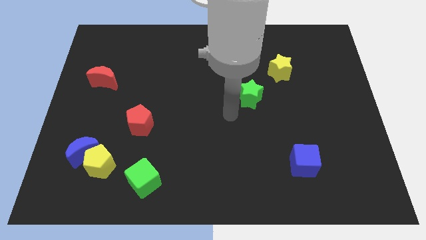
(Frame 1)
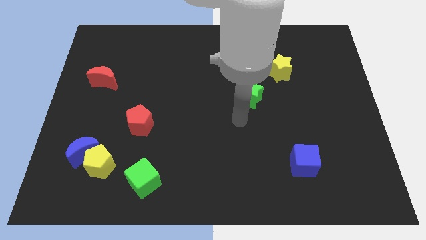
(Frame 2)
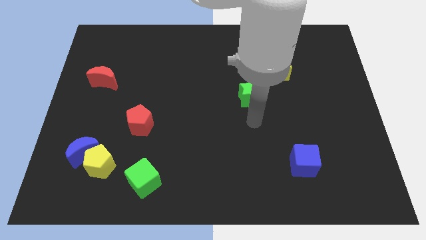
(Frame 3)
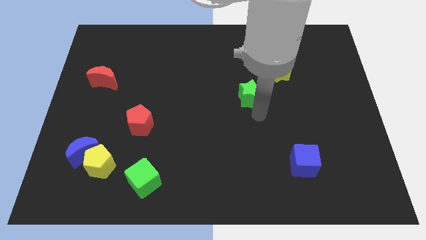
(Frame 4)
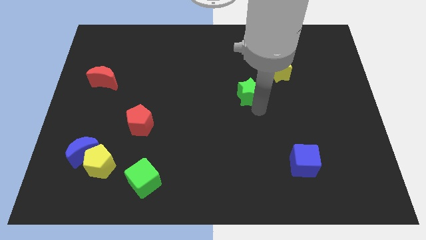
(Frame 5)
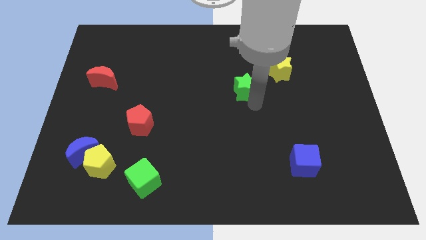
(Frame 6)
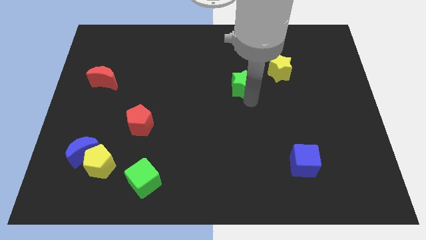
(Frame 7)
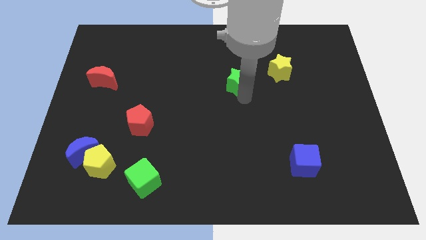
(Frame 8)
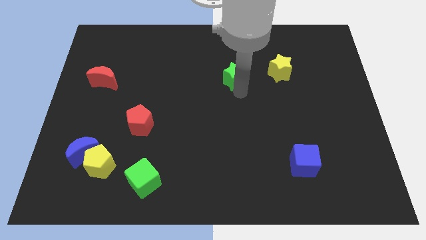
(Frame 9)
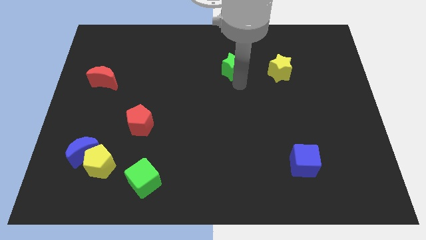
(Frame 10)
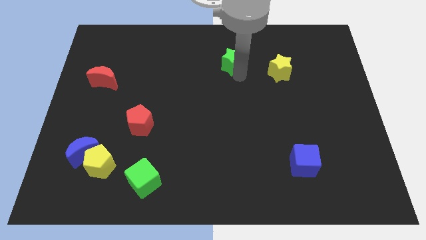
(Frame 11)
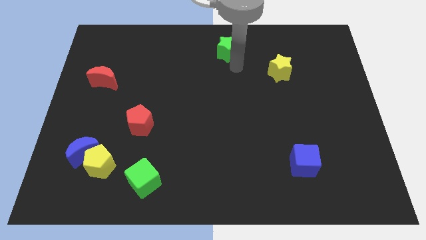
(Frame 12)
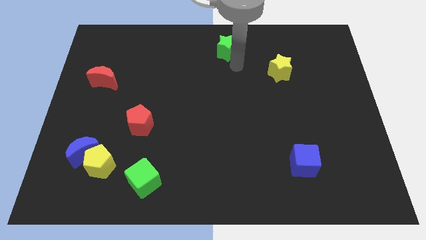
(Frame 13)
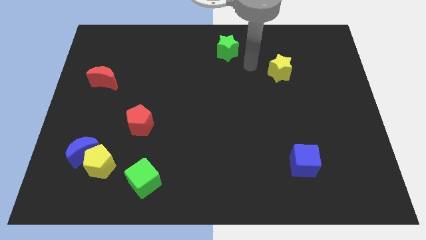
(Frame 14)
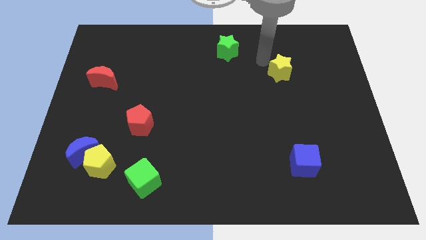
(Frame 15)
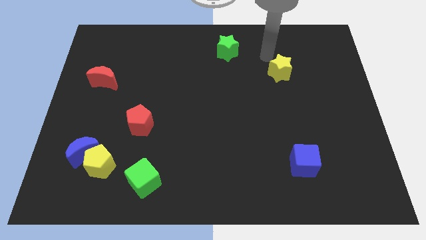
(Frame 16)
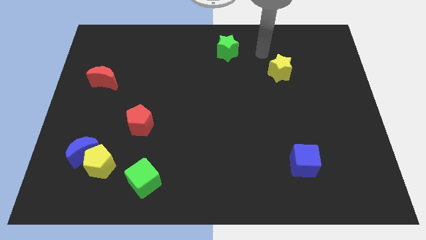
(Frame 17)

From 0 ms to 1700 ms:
move green star to the top center of the board

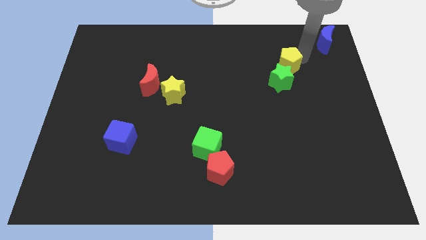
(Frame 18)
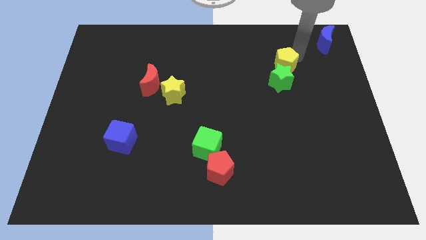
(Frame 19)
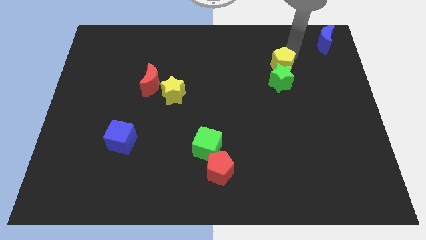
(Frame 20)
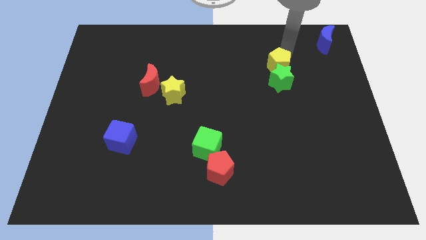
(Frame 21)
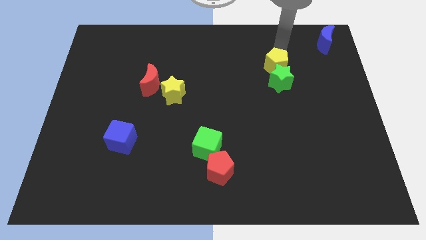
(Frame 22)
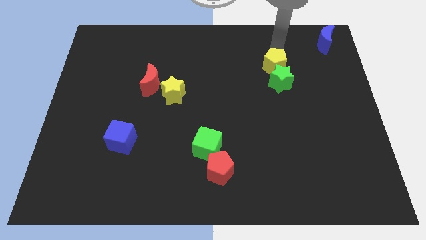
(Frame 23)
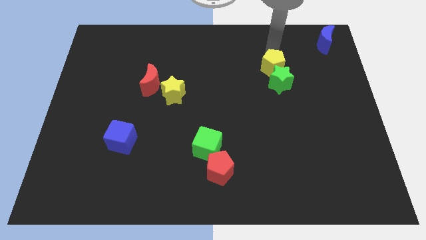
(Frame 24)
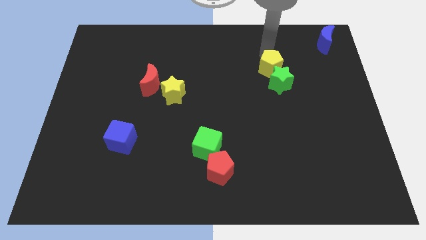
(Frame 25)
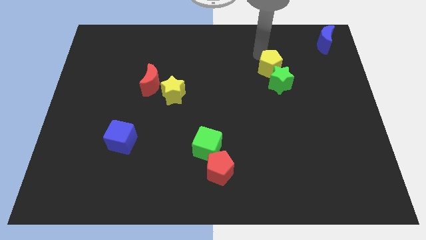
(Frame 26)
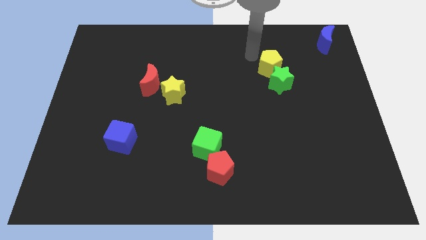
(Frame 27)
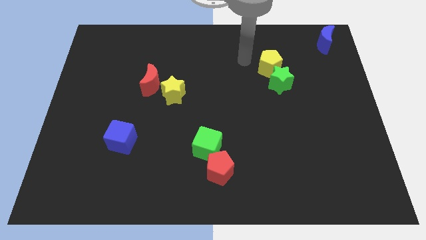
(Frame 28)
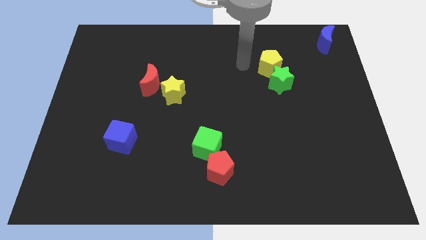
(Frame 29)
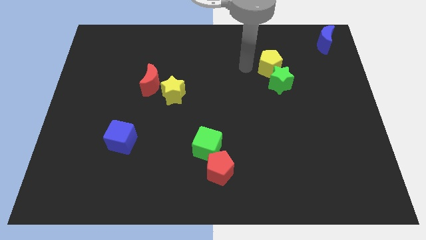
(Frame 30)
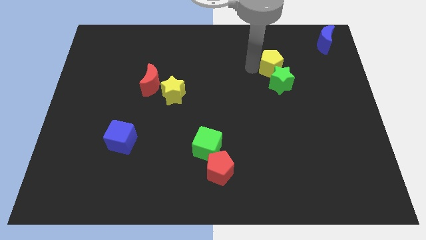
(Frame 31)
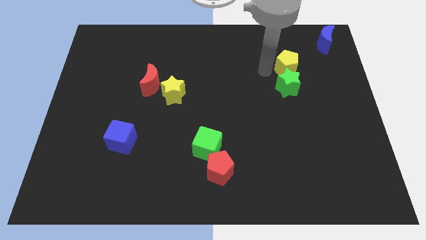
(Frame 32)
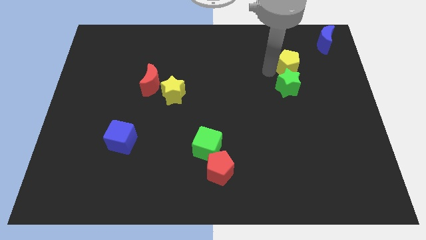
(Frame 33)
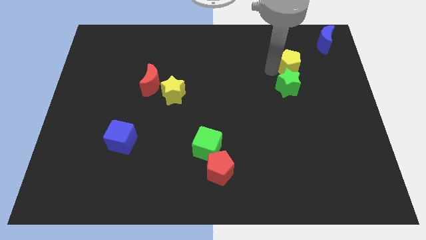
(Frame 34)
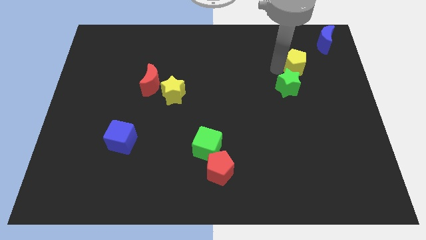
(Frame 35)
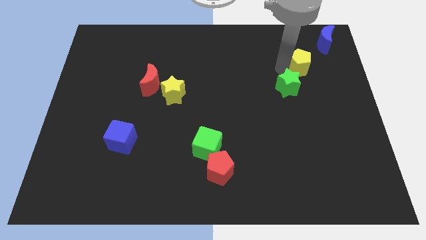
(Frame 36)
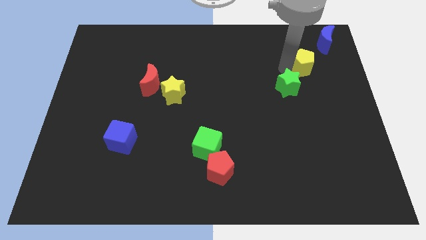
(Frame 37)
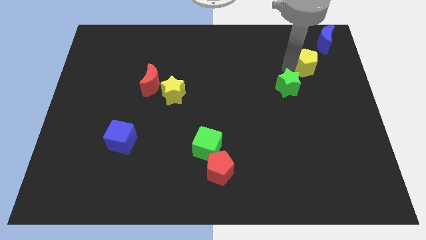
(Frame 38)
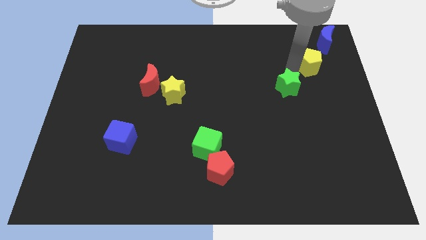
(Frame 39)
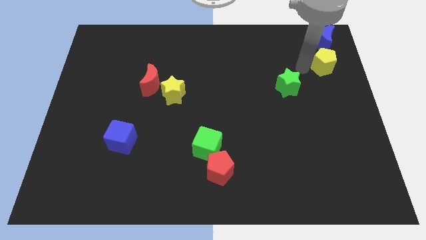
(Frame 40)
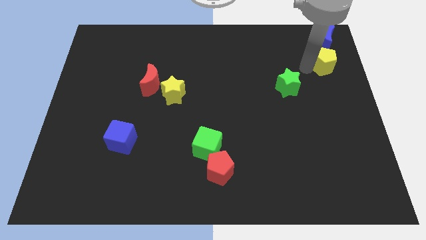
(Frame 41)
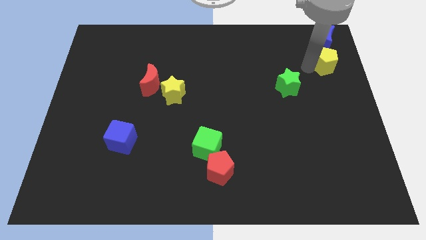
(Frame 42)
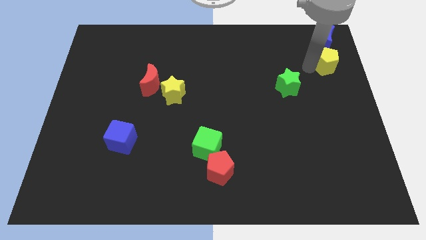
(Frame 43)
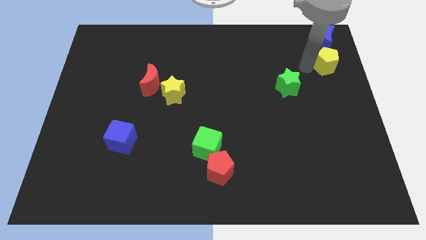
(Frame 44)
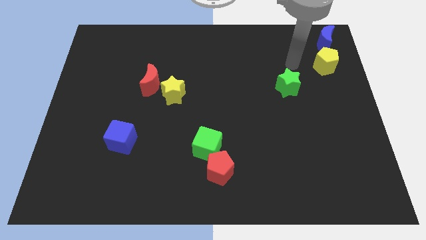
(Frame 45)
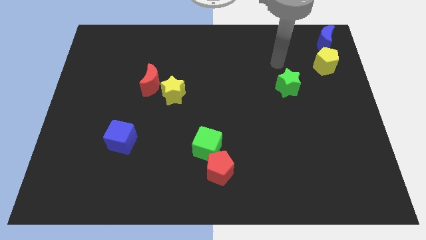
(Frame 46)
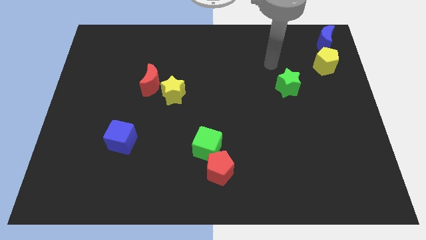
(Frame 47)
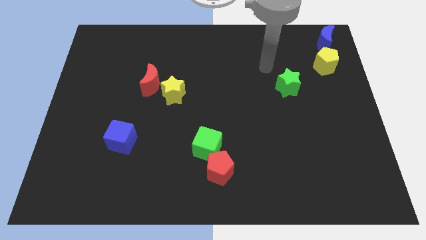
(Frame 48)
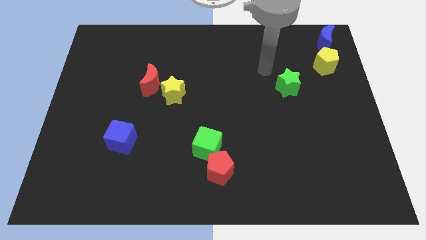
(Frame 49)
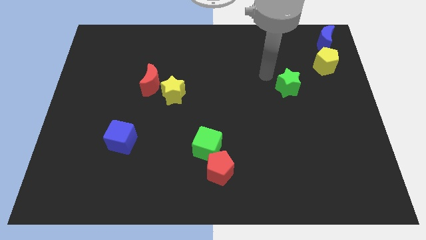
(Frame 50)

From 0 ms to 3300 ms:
put the yellow pentagon below the blue crescent

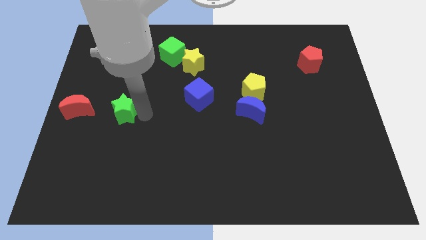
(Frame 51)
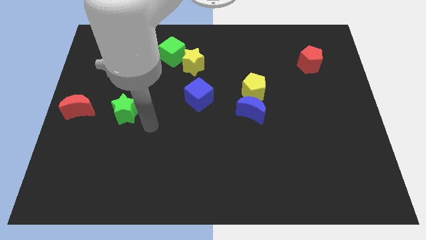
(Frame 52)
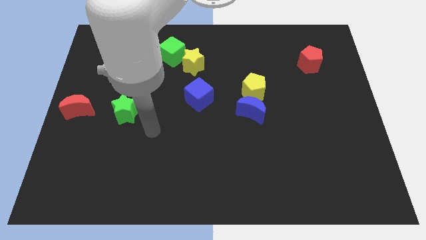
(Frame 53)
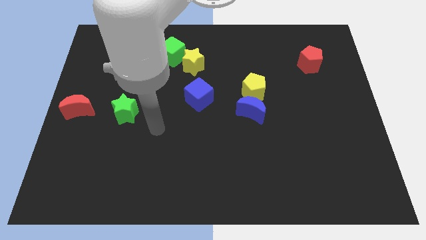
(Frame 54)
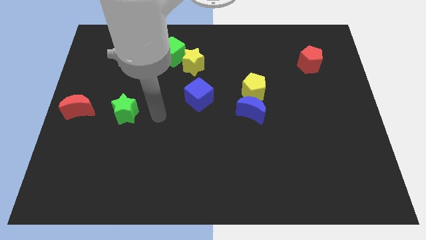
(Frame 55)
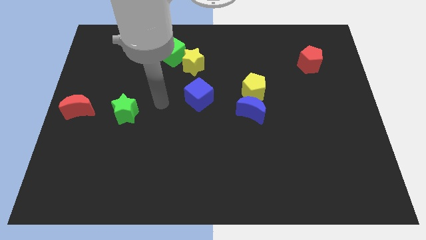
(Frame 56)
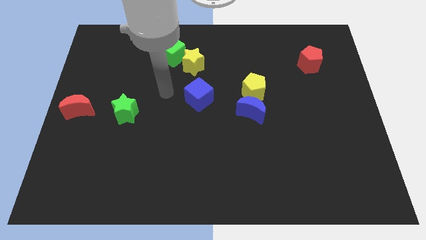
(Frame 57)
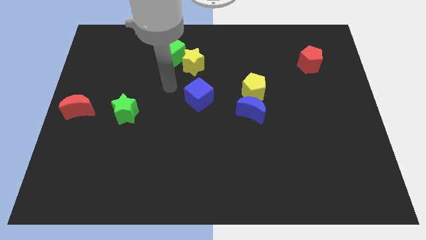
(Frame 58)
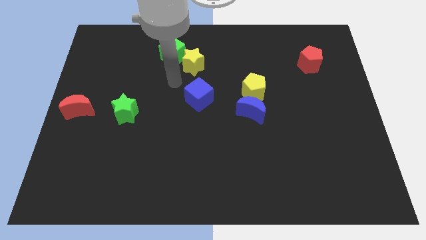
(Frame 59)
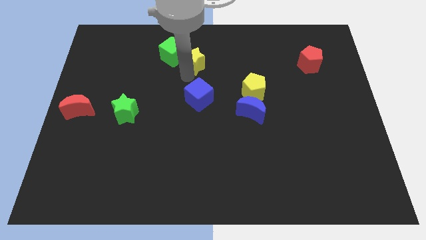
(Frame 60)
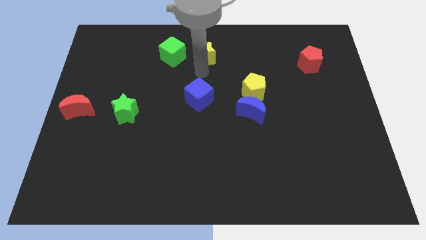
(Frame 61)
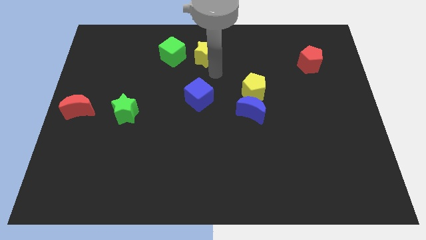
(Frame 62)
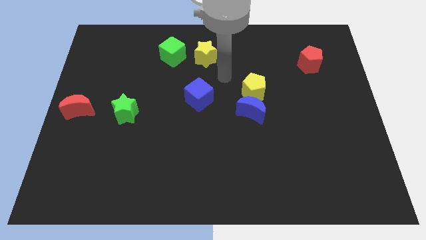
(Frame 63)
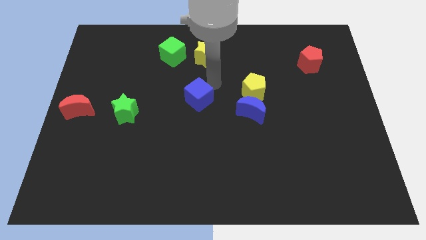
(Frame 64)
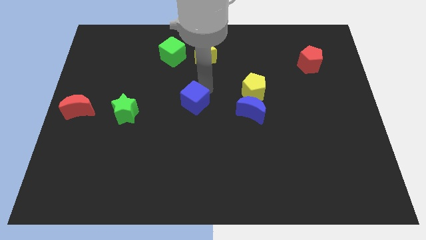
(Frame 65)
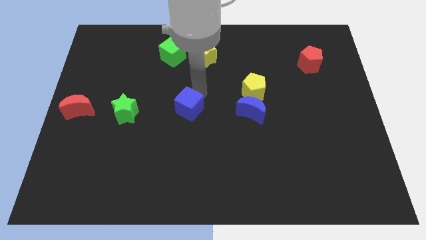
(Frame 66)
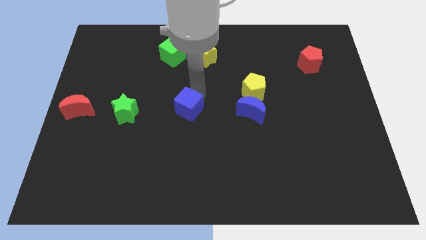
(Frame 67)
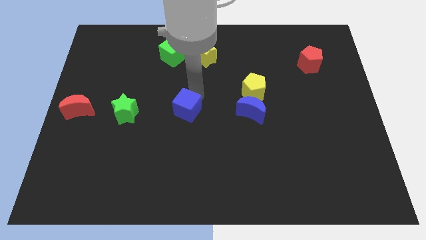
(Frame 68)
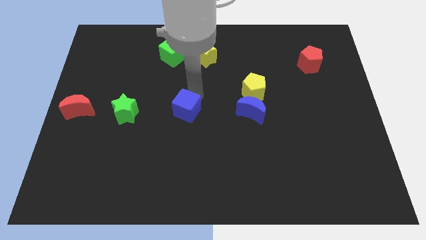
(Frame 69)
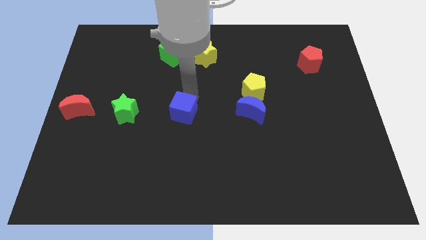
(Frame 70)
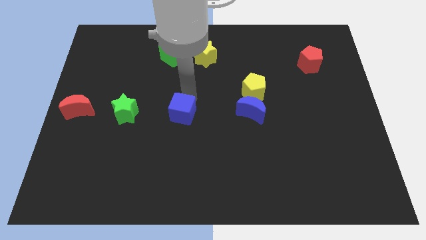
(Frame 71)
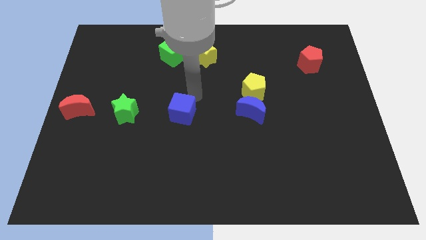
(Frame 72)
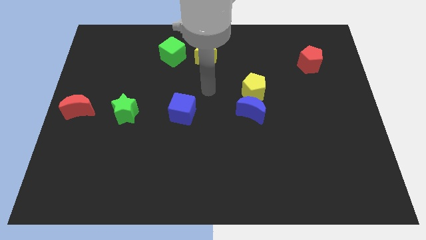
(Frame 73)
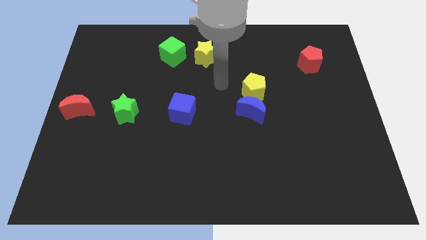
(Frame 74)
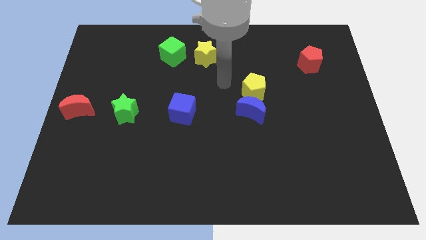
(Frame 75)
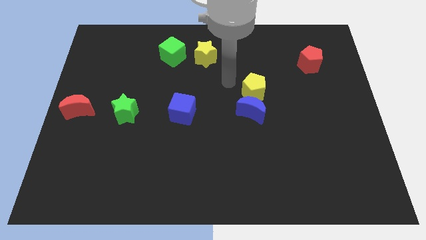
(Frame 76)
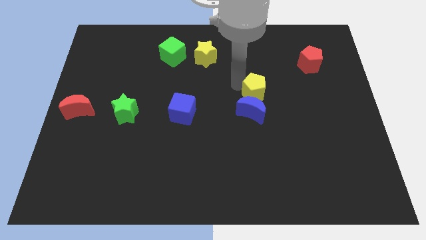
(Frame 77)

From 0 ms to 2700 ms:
place the blue cube in between the green star and blue moon

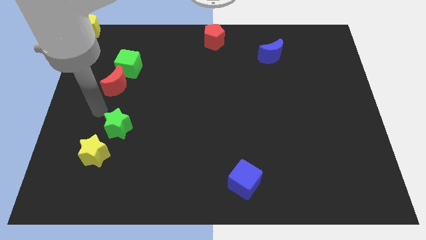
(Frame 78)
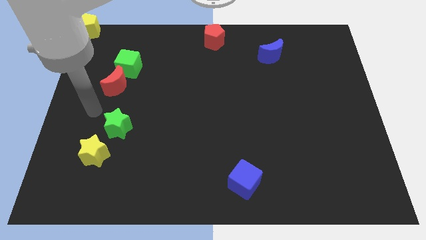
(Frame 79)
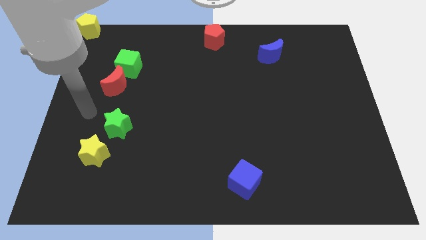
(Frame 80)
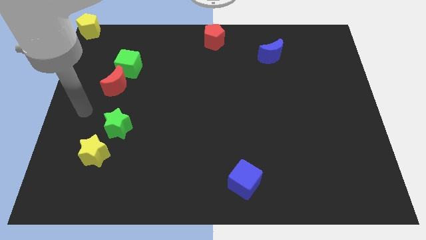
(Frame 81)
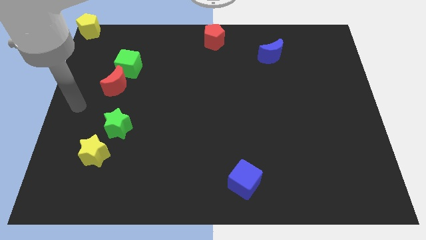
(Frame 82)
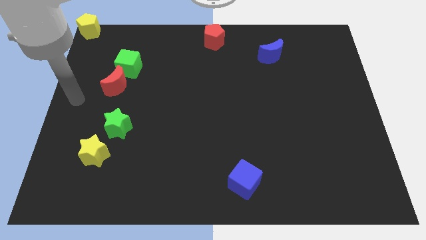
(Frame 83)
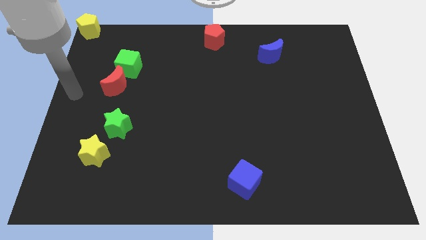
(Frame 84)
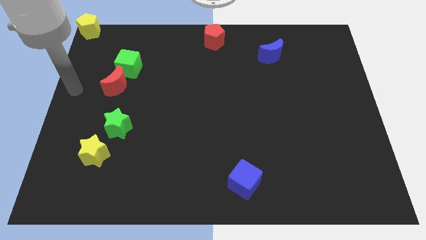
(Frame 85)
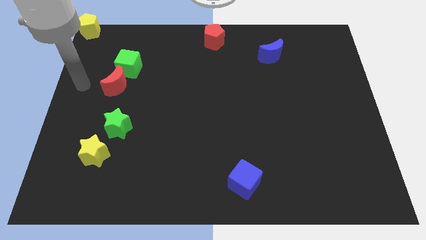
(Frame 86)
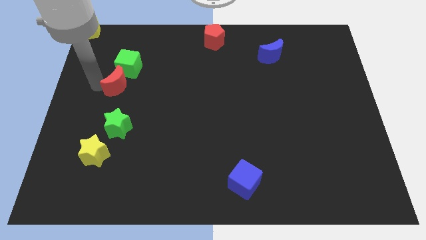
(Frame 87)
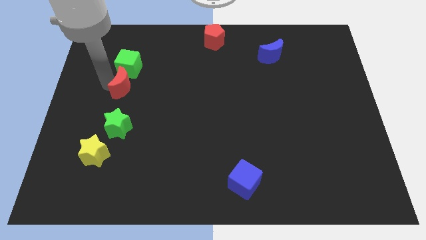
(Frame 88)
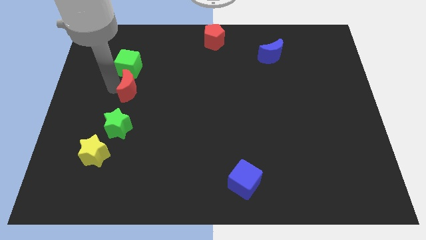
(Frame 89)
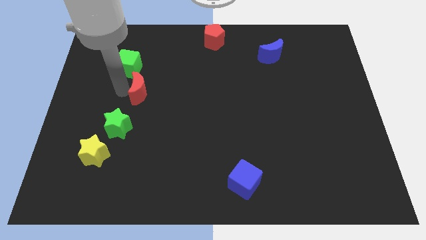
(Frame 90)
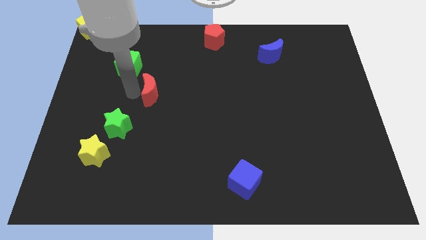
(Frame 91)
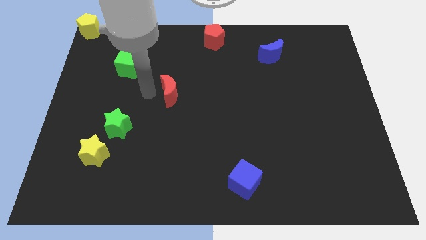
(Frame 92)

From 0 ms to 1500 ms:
separate the red crescent from the green cube
